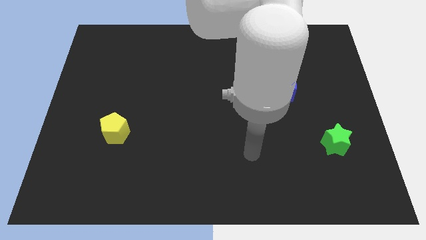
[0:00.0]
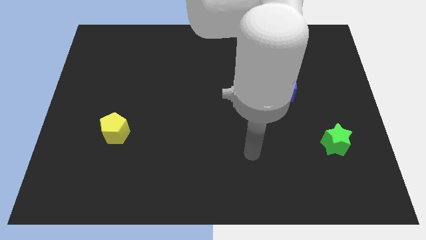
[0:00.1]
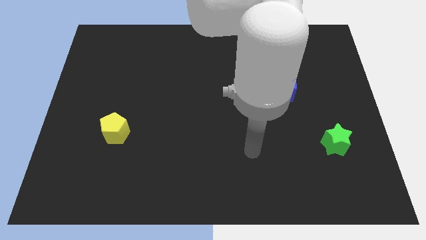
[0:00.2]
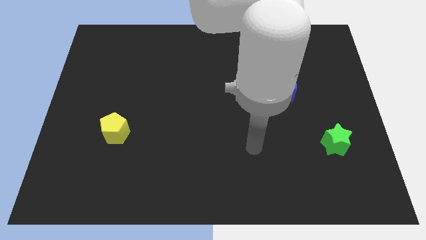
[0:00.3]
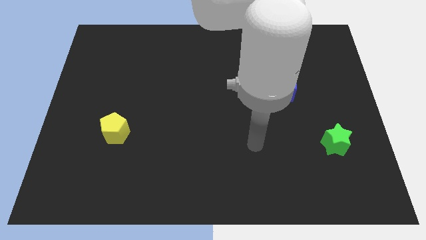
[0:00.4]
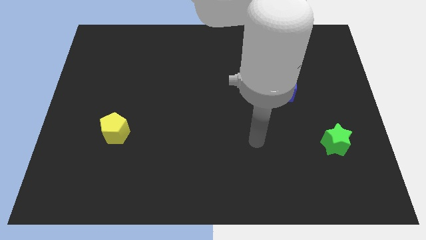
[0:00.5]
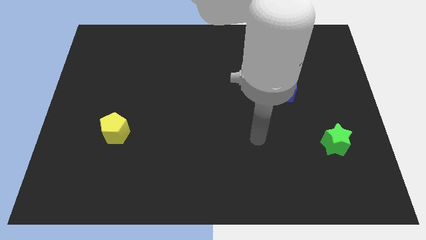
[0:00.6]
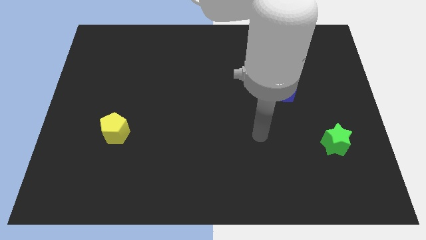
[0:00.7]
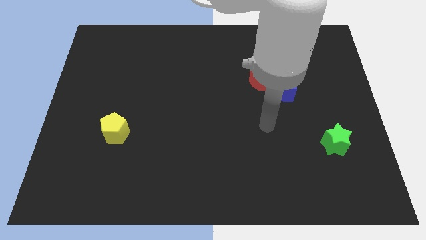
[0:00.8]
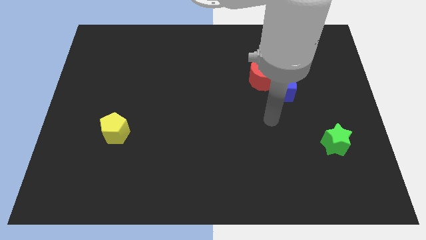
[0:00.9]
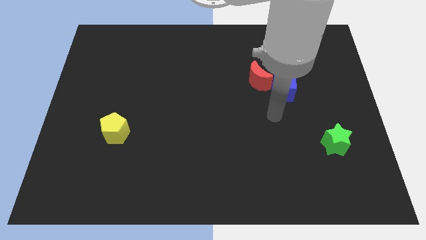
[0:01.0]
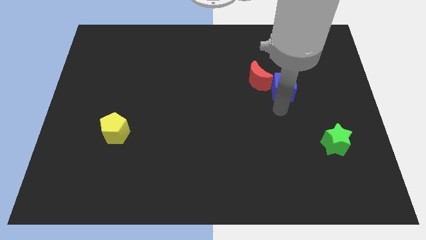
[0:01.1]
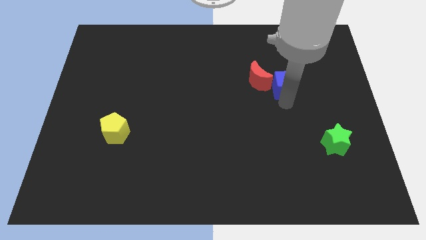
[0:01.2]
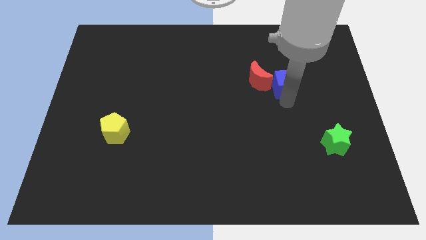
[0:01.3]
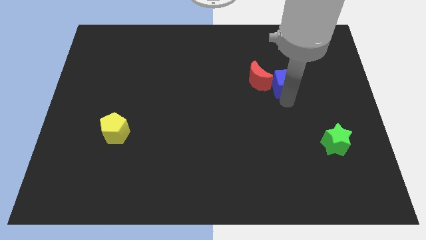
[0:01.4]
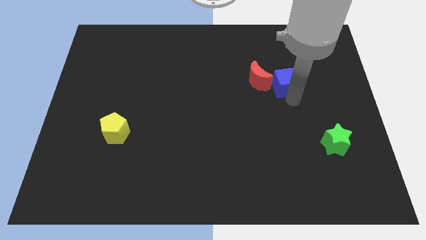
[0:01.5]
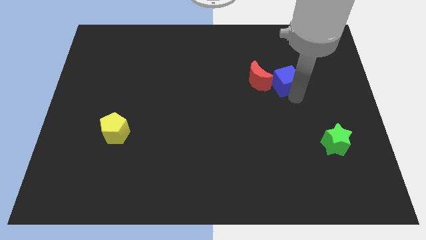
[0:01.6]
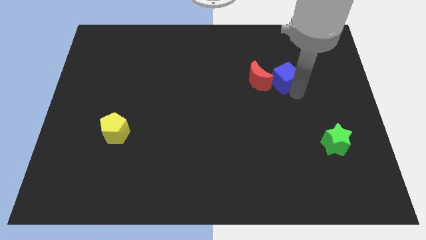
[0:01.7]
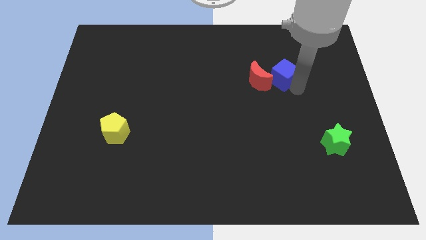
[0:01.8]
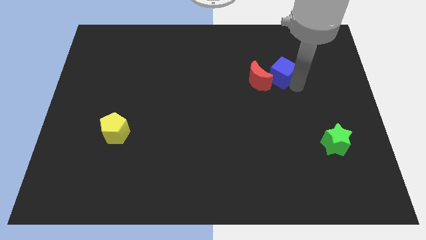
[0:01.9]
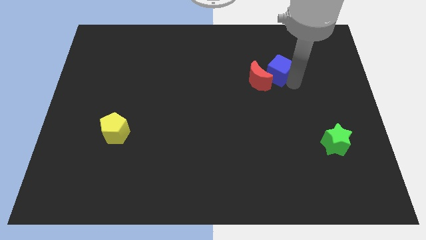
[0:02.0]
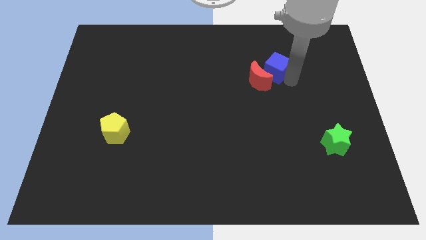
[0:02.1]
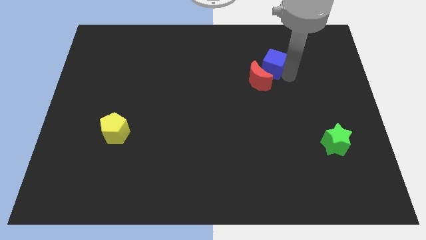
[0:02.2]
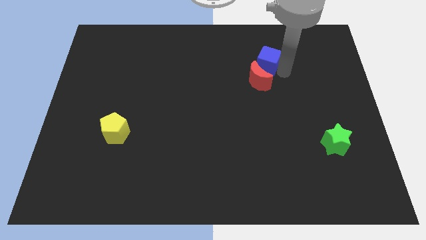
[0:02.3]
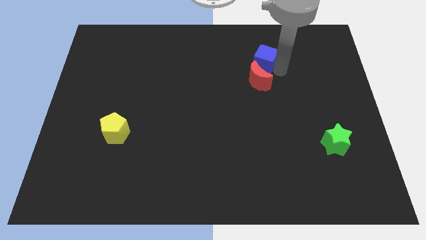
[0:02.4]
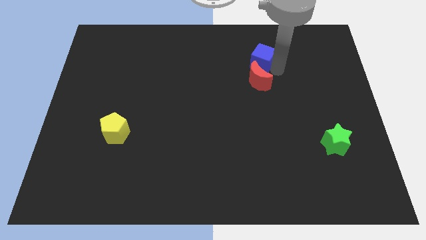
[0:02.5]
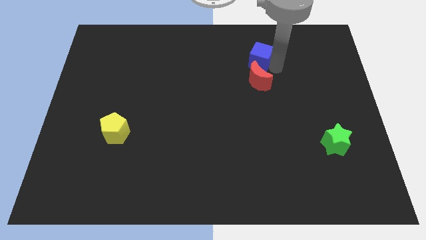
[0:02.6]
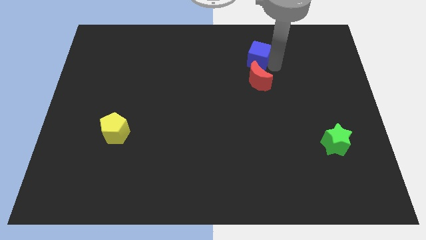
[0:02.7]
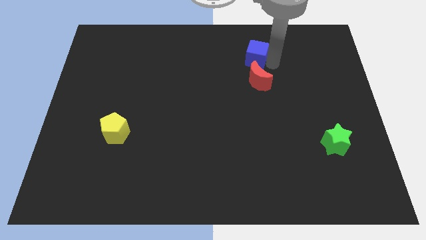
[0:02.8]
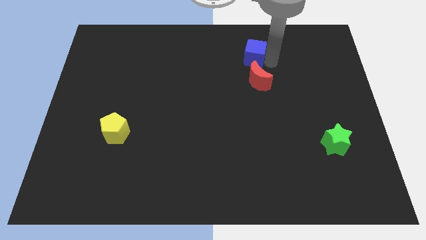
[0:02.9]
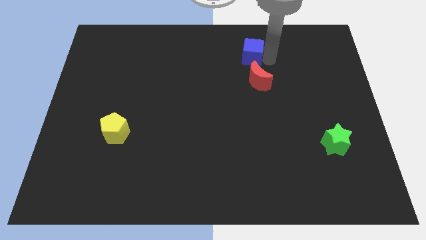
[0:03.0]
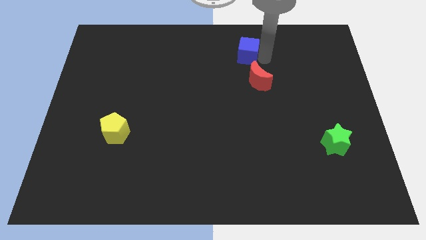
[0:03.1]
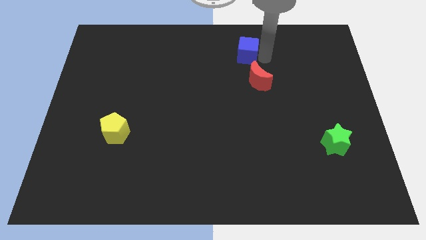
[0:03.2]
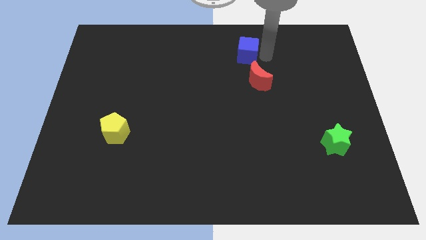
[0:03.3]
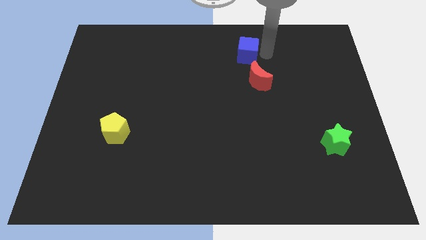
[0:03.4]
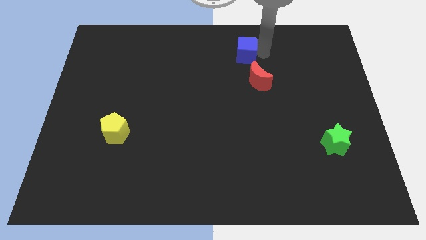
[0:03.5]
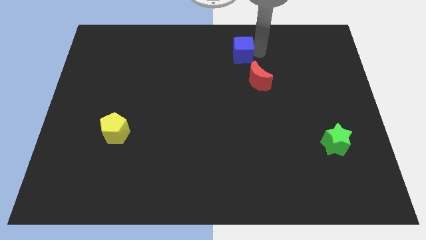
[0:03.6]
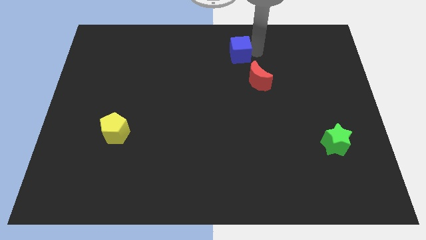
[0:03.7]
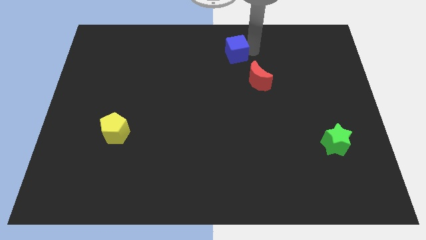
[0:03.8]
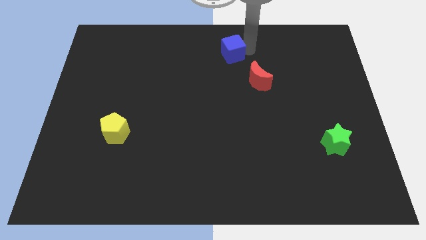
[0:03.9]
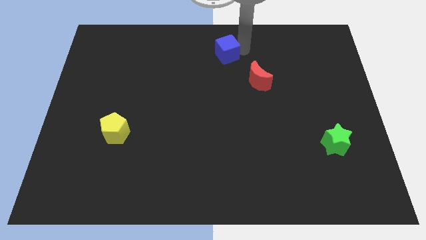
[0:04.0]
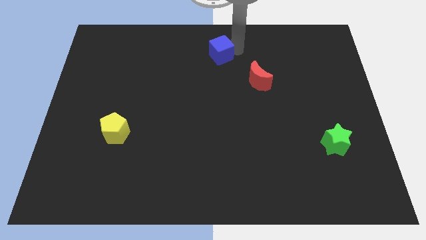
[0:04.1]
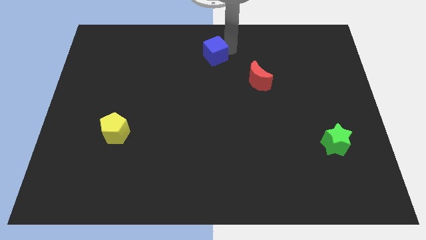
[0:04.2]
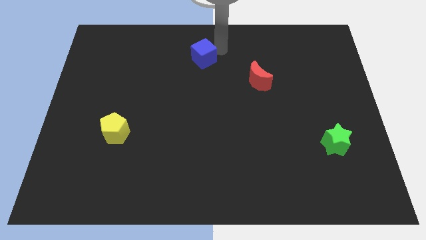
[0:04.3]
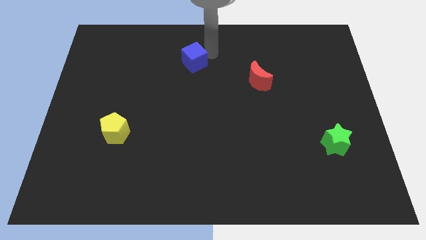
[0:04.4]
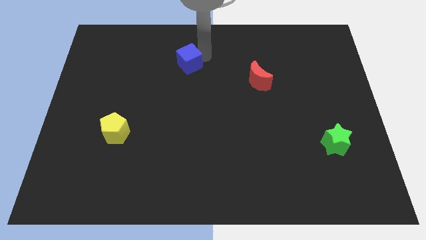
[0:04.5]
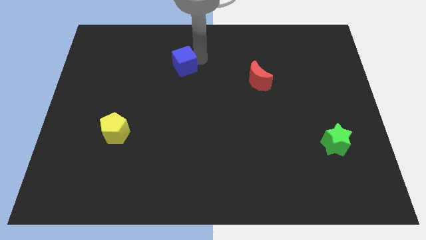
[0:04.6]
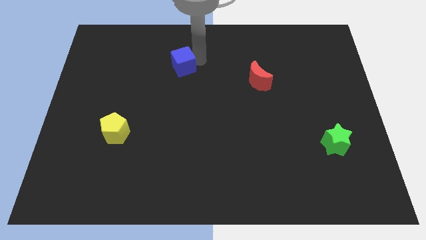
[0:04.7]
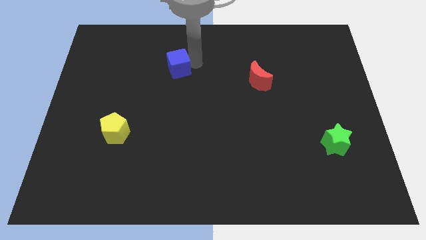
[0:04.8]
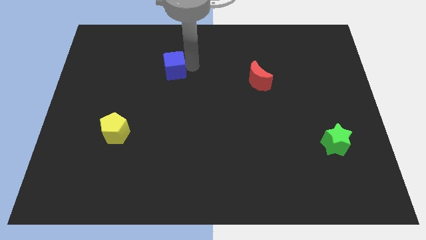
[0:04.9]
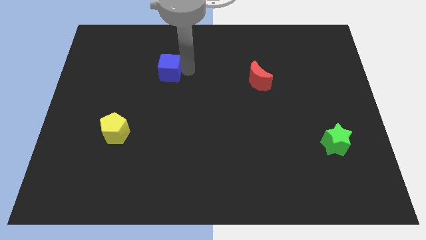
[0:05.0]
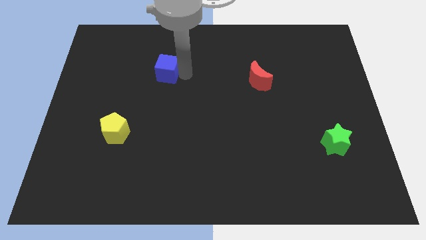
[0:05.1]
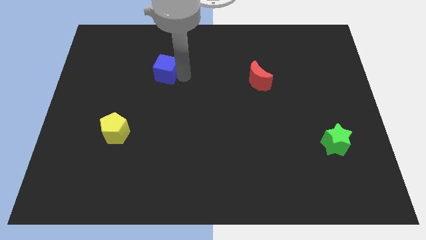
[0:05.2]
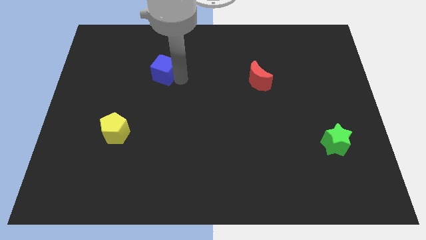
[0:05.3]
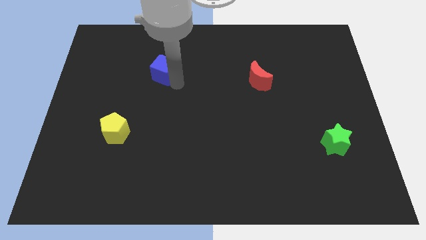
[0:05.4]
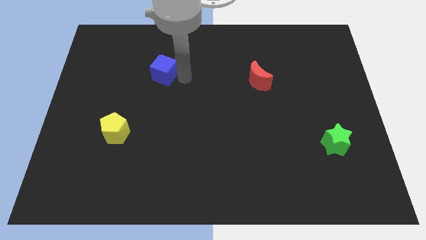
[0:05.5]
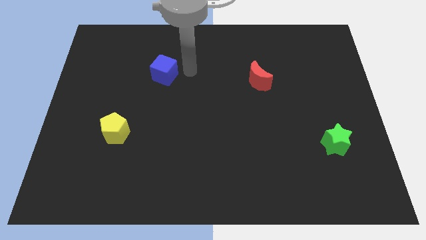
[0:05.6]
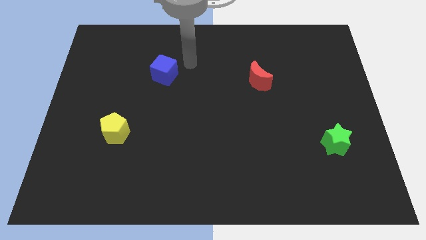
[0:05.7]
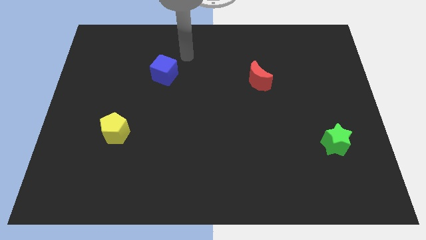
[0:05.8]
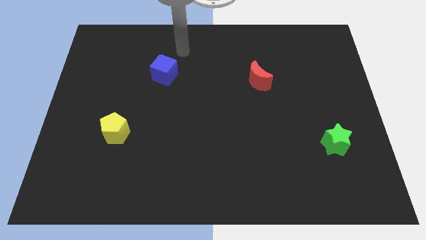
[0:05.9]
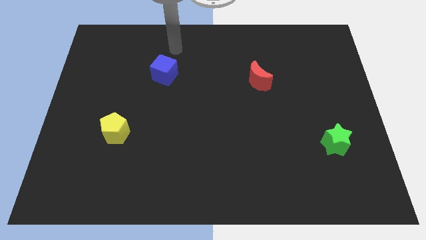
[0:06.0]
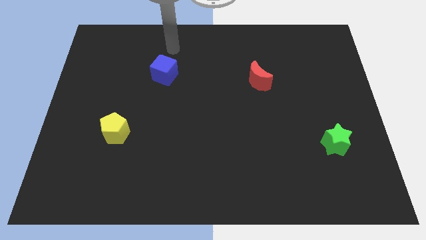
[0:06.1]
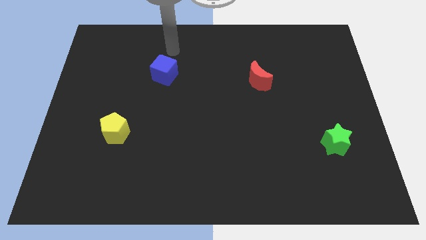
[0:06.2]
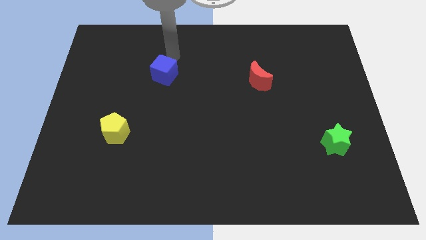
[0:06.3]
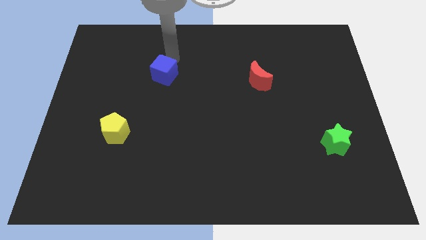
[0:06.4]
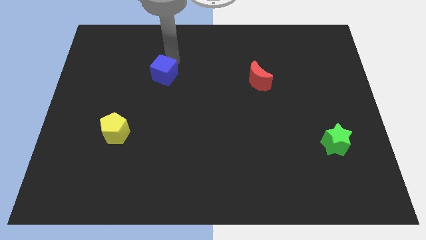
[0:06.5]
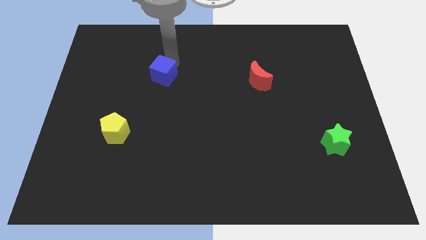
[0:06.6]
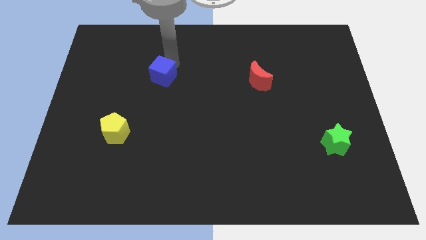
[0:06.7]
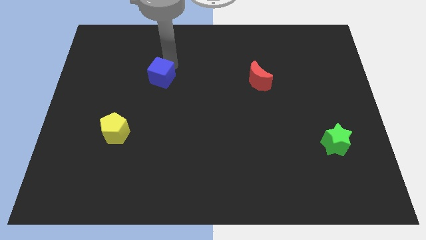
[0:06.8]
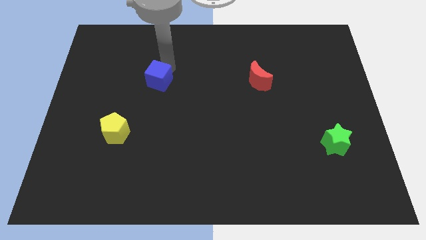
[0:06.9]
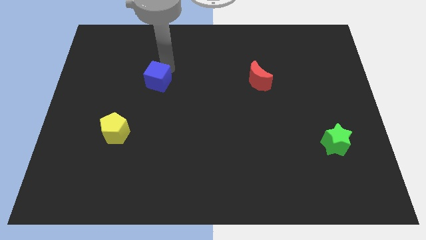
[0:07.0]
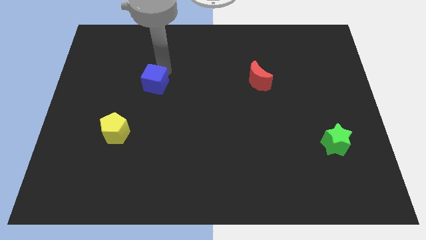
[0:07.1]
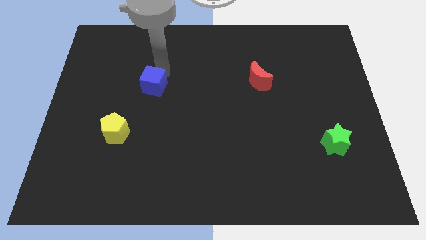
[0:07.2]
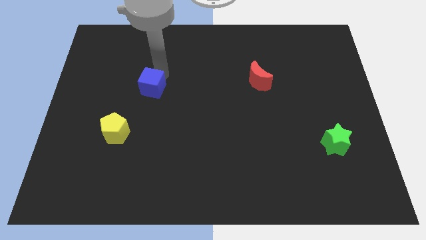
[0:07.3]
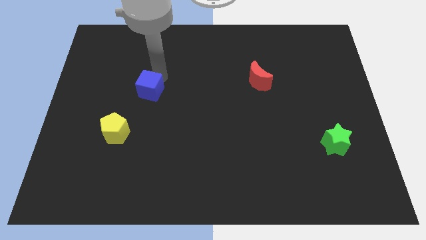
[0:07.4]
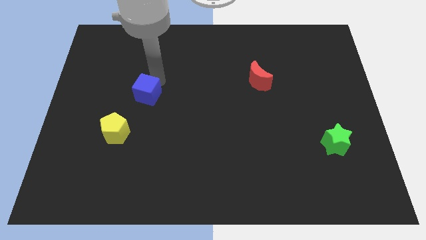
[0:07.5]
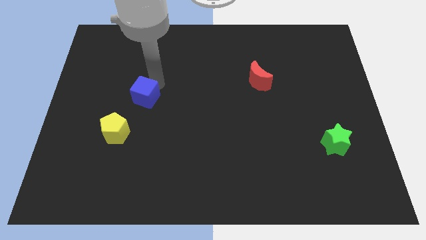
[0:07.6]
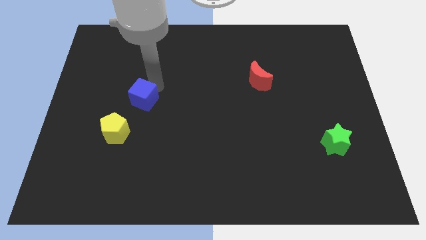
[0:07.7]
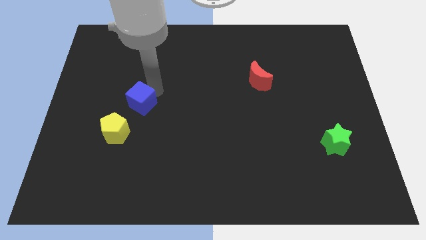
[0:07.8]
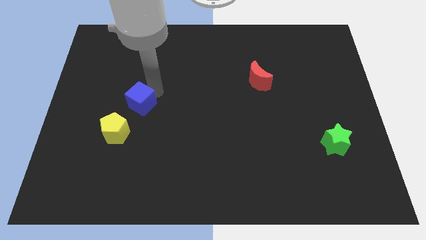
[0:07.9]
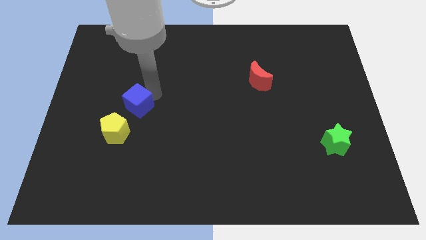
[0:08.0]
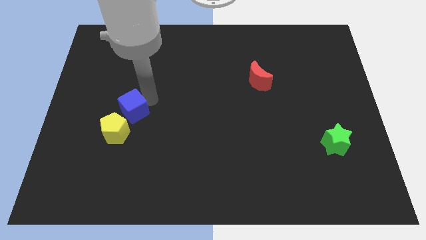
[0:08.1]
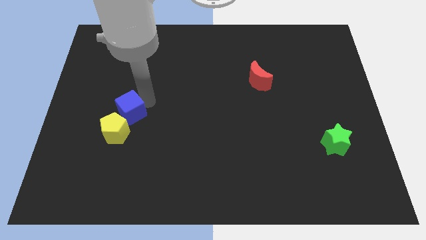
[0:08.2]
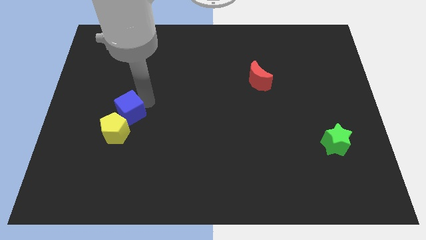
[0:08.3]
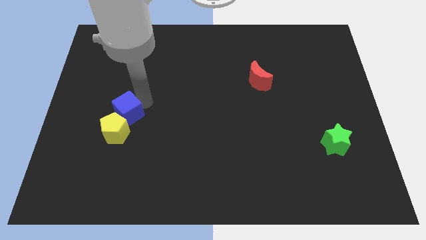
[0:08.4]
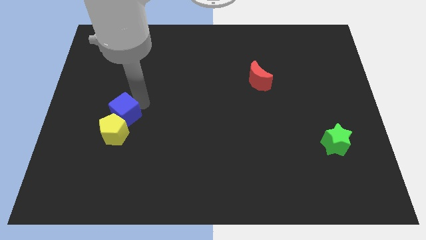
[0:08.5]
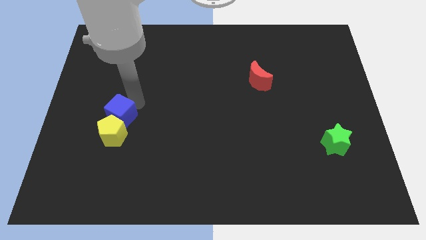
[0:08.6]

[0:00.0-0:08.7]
put the blue block towards the yellow block
